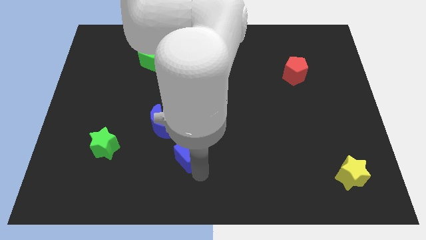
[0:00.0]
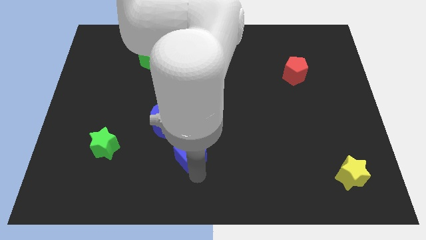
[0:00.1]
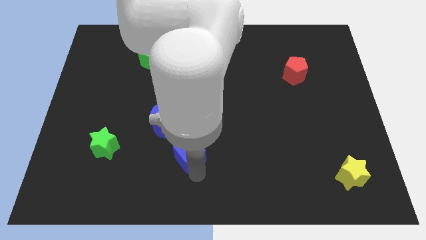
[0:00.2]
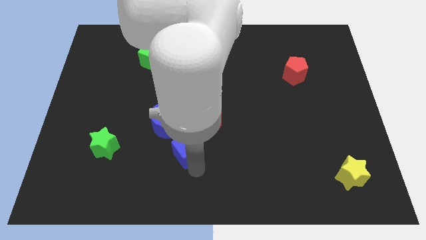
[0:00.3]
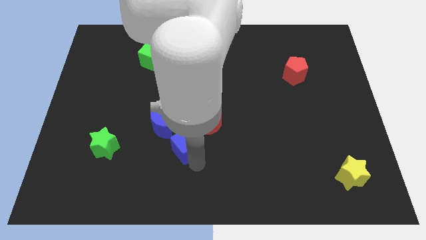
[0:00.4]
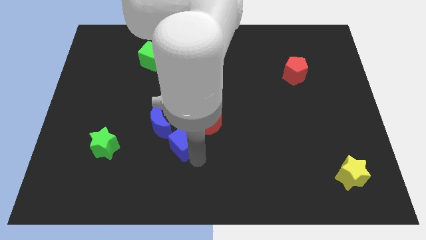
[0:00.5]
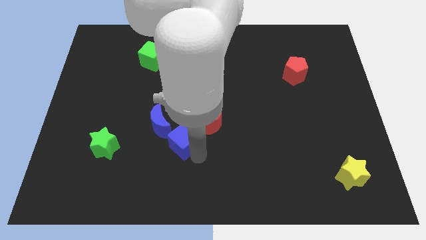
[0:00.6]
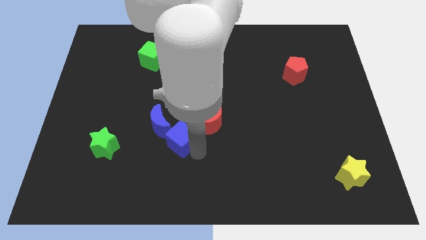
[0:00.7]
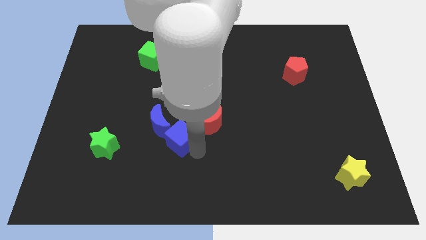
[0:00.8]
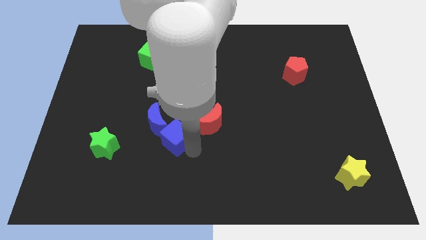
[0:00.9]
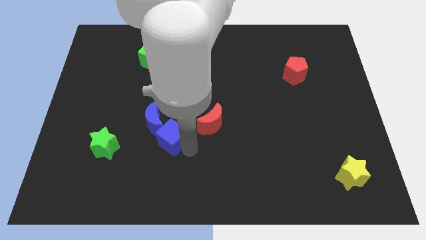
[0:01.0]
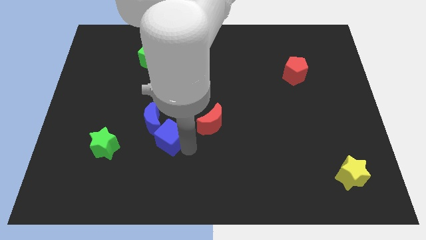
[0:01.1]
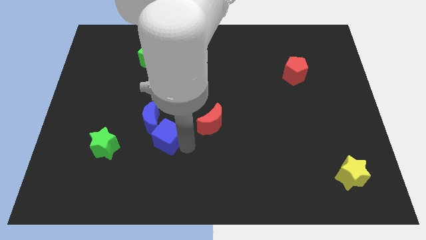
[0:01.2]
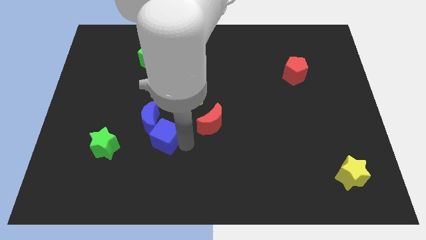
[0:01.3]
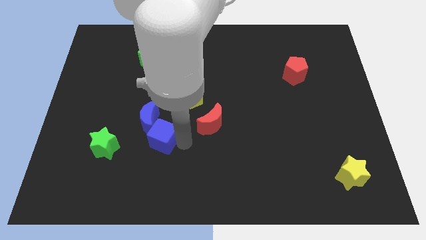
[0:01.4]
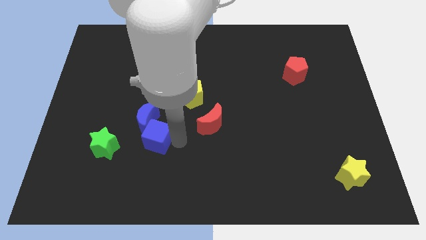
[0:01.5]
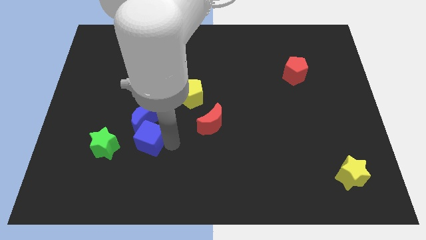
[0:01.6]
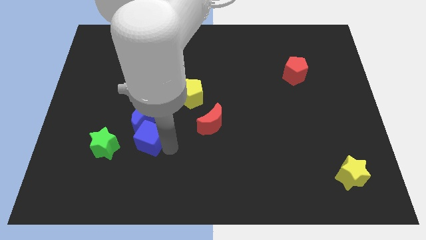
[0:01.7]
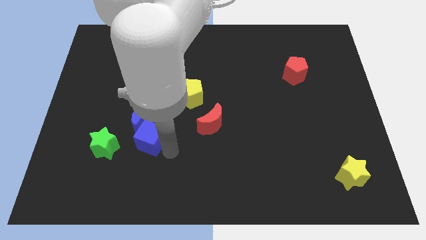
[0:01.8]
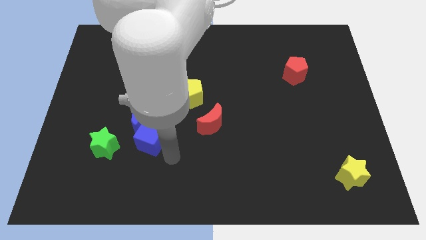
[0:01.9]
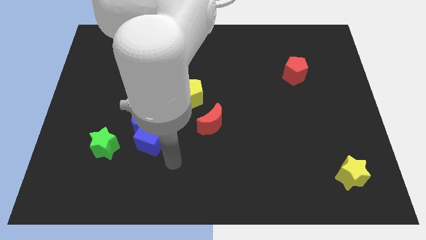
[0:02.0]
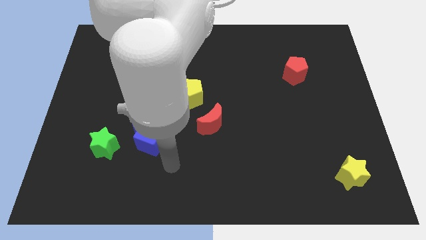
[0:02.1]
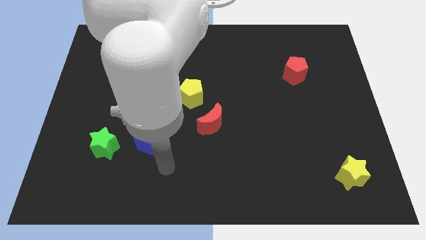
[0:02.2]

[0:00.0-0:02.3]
move the blue cube to the blue moon

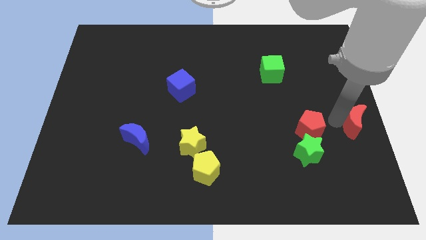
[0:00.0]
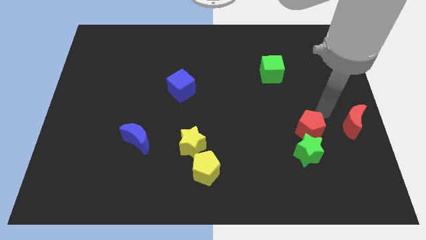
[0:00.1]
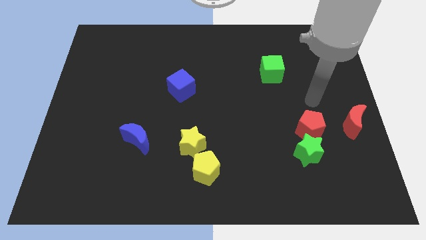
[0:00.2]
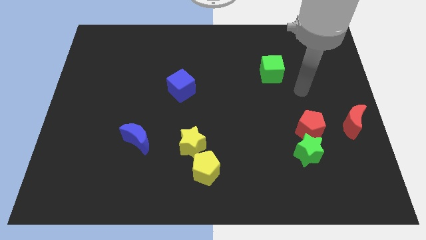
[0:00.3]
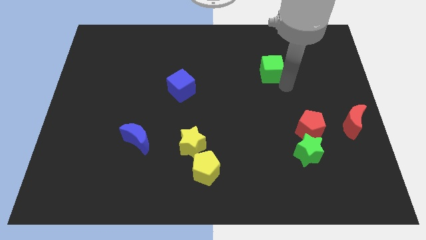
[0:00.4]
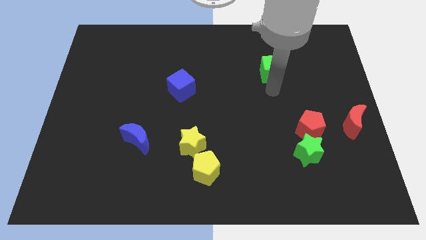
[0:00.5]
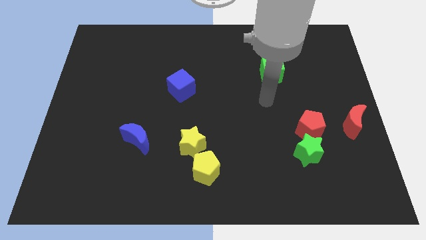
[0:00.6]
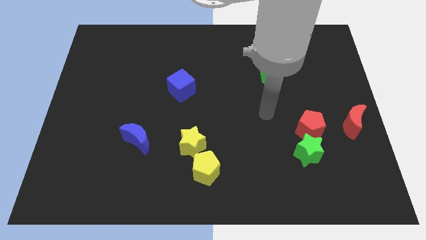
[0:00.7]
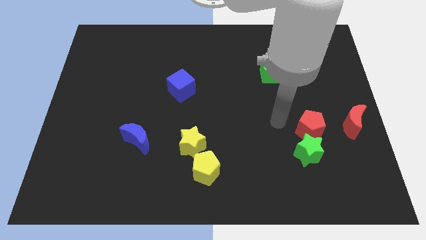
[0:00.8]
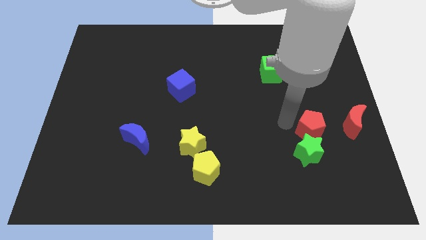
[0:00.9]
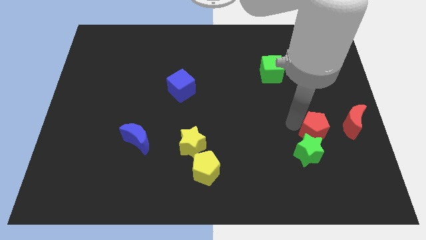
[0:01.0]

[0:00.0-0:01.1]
place the arm left to the red pentagon

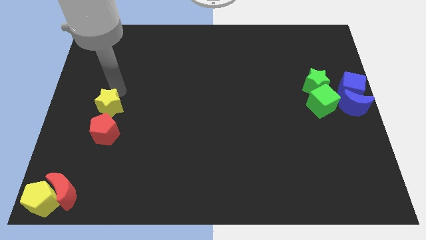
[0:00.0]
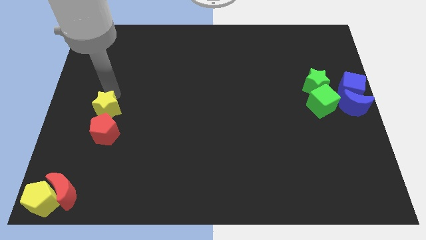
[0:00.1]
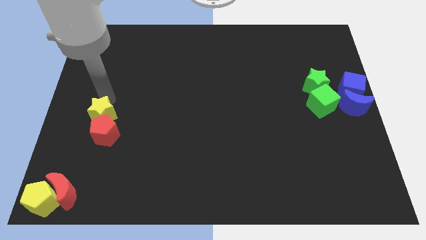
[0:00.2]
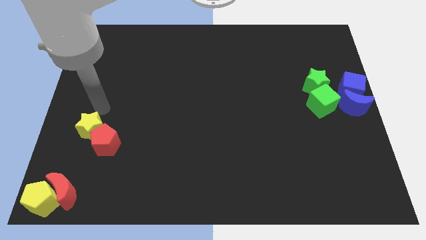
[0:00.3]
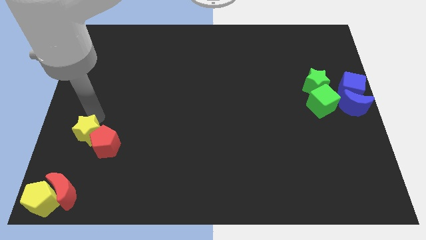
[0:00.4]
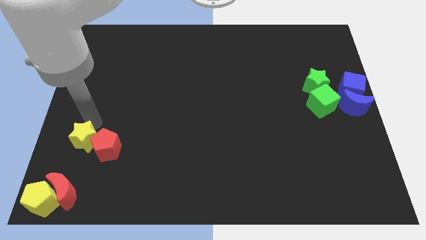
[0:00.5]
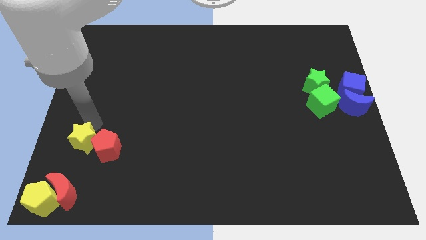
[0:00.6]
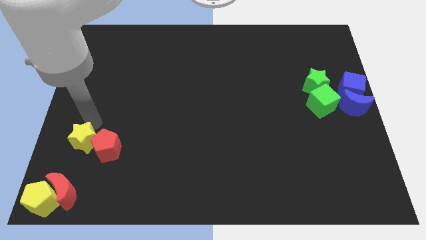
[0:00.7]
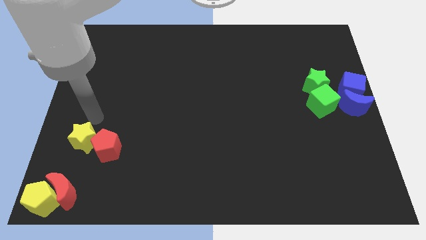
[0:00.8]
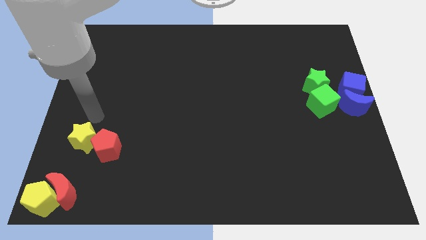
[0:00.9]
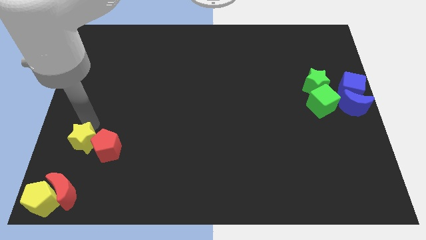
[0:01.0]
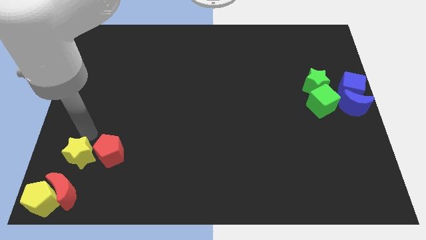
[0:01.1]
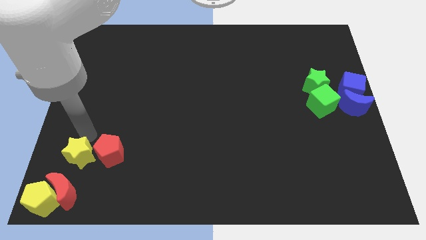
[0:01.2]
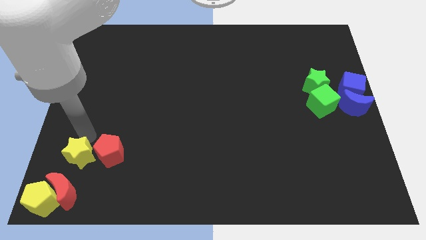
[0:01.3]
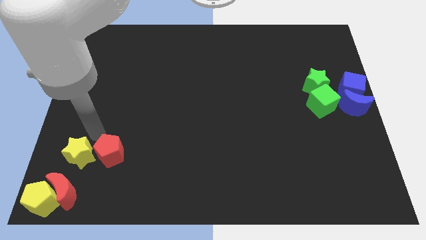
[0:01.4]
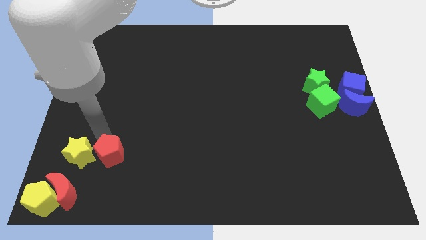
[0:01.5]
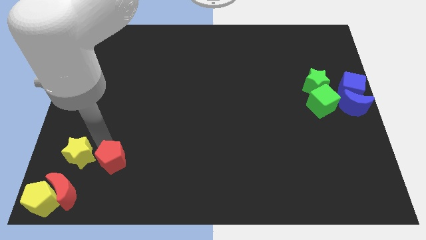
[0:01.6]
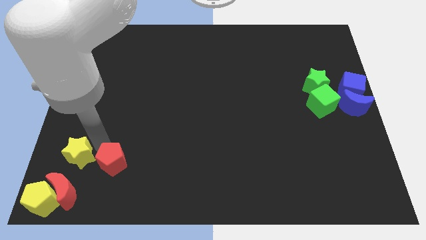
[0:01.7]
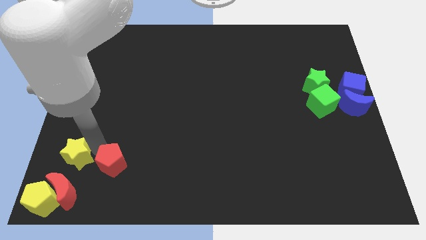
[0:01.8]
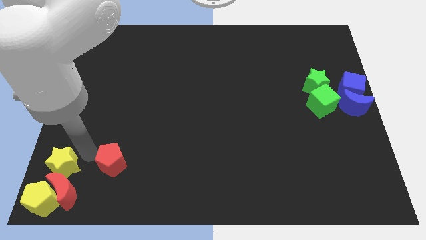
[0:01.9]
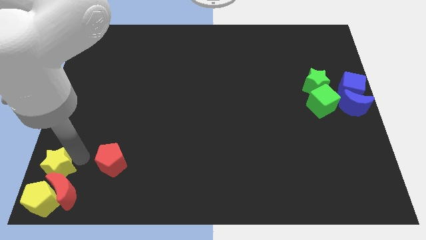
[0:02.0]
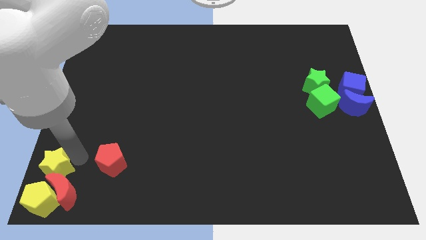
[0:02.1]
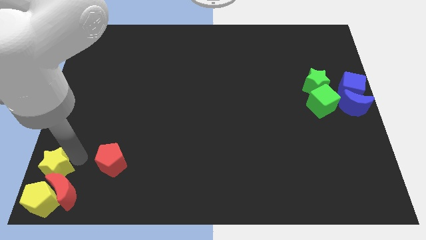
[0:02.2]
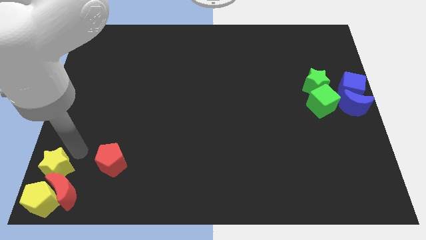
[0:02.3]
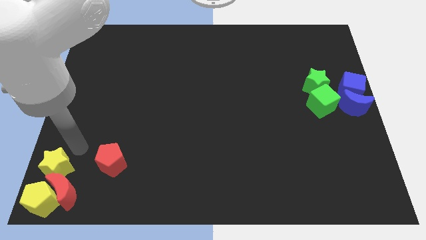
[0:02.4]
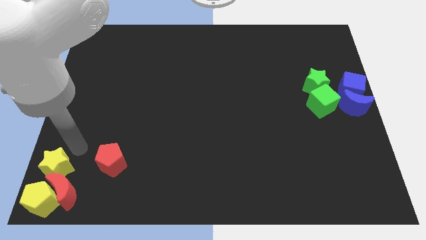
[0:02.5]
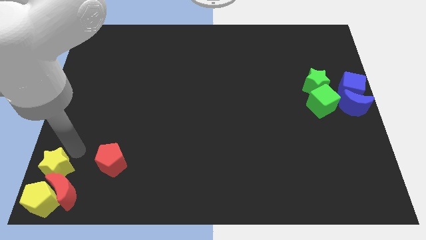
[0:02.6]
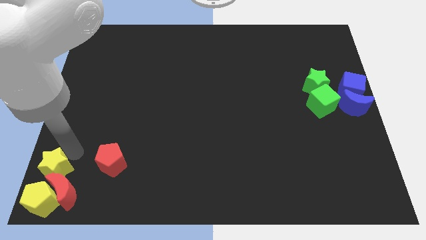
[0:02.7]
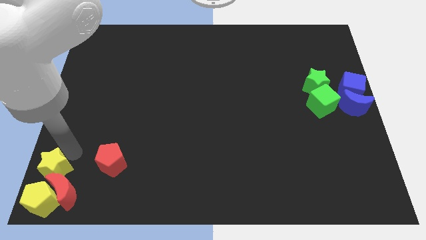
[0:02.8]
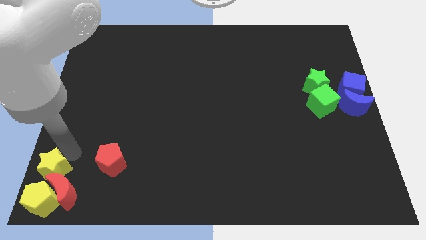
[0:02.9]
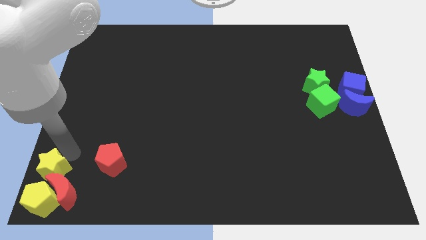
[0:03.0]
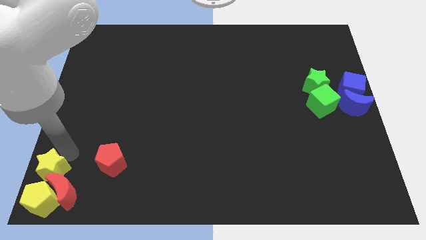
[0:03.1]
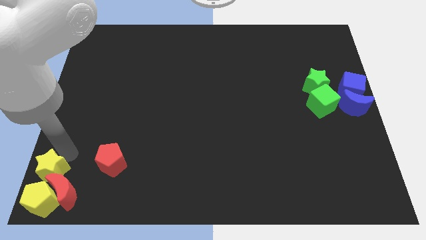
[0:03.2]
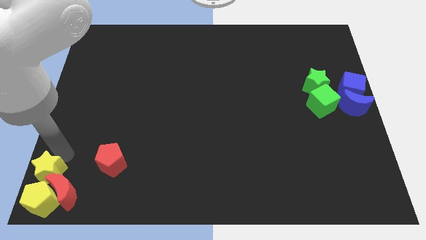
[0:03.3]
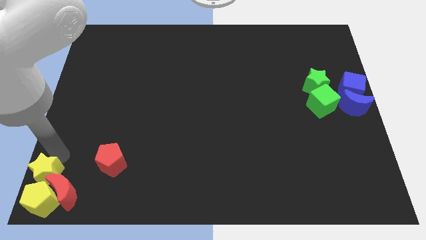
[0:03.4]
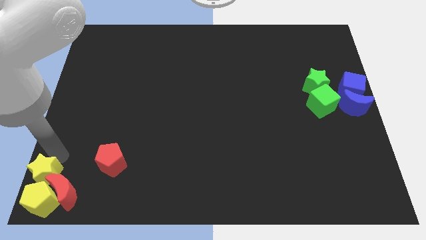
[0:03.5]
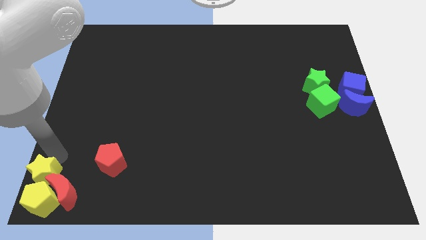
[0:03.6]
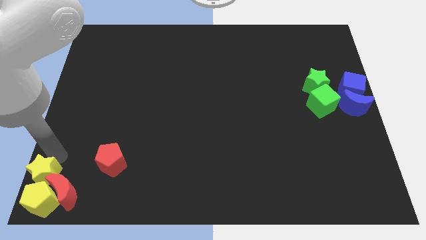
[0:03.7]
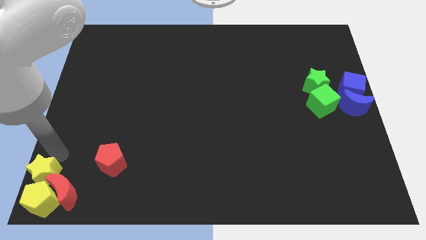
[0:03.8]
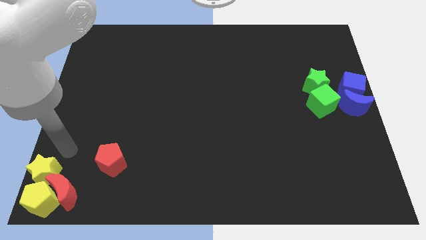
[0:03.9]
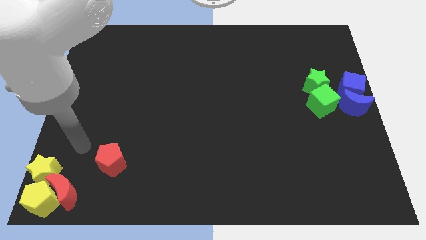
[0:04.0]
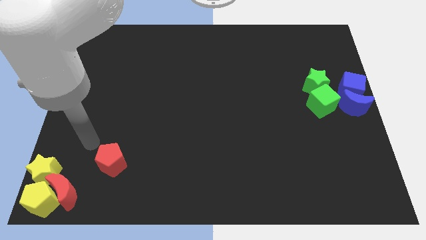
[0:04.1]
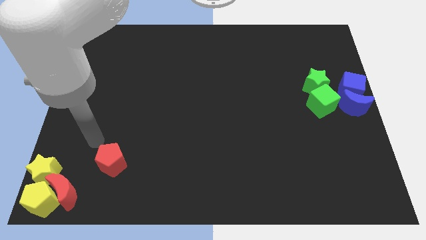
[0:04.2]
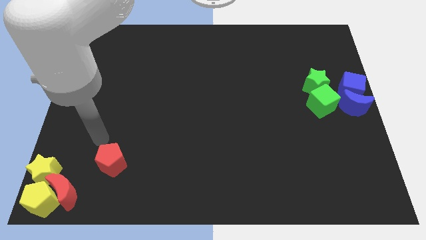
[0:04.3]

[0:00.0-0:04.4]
move the yellow star above the yellow pentagon

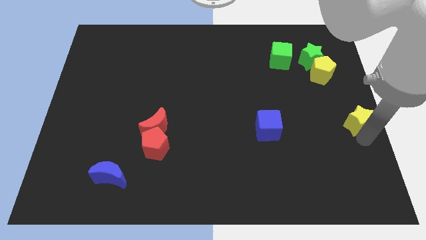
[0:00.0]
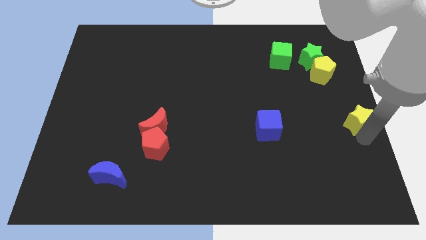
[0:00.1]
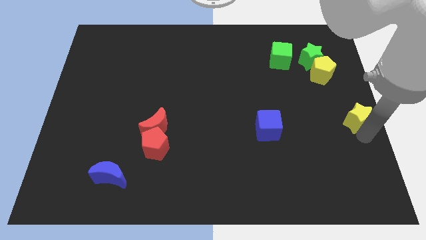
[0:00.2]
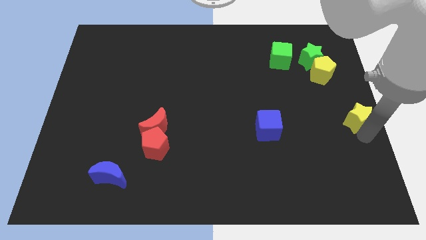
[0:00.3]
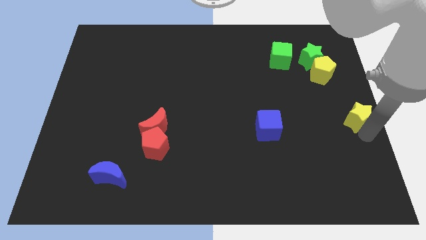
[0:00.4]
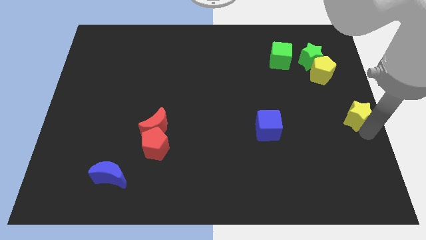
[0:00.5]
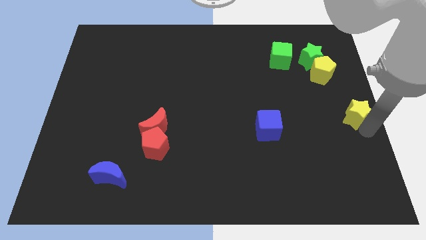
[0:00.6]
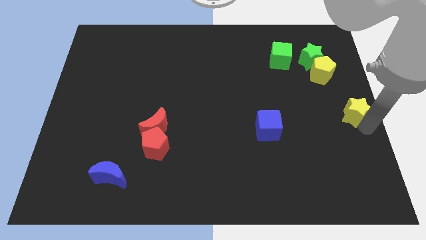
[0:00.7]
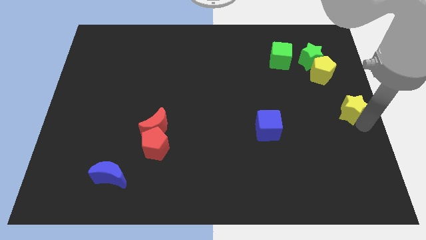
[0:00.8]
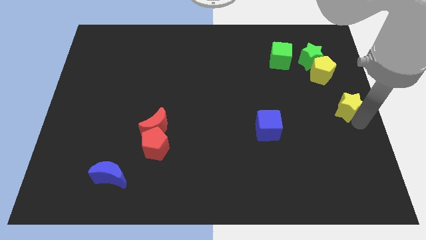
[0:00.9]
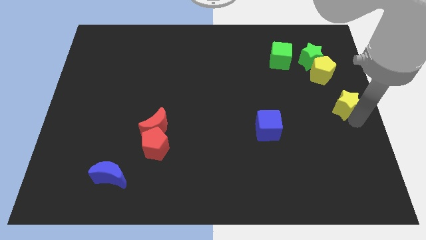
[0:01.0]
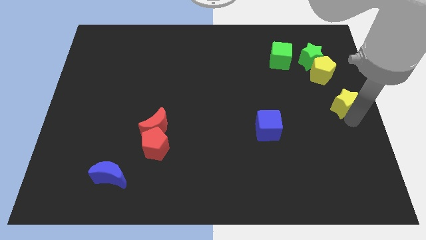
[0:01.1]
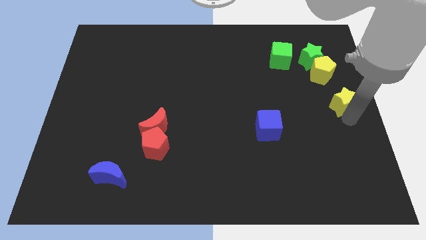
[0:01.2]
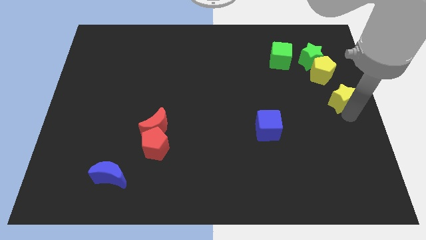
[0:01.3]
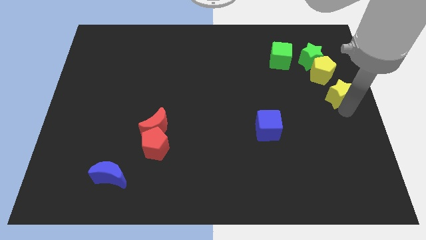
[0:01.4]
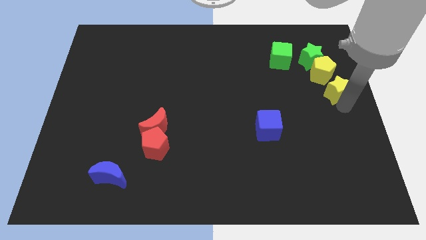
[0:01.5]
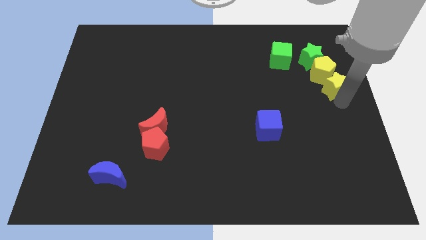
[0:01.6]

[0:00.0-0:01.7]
move yellow star into the yellow pentagon
